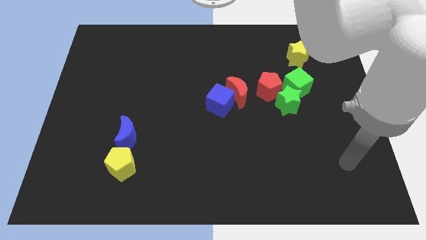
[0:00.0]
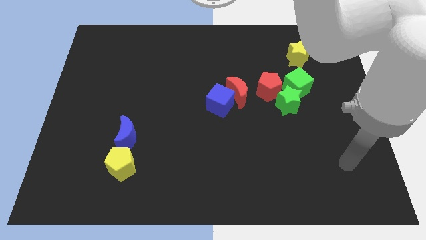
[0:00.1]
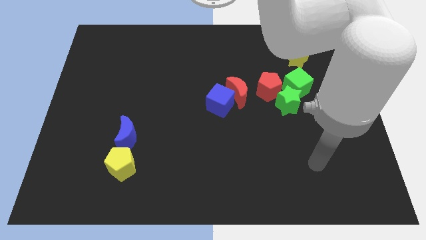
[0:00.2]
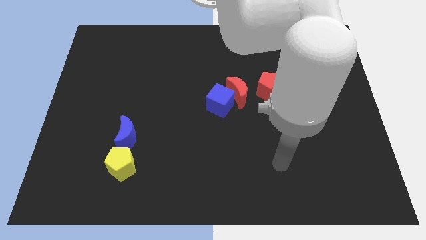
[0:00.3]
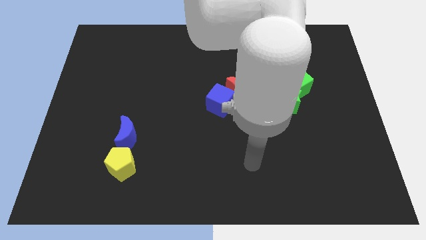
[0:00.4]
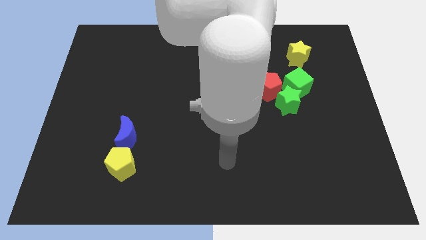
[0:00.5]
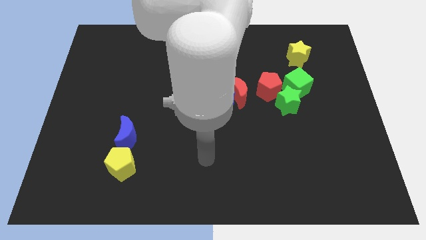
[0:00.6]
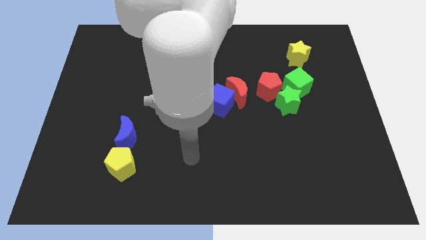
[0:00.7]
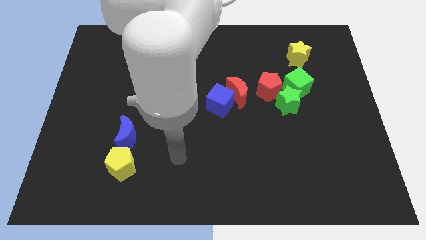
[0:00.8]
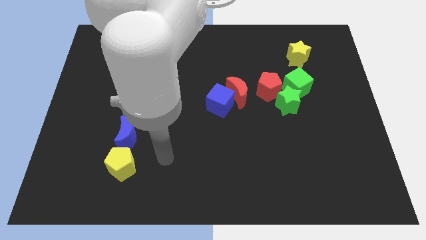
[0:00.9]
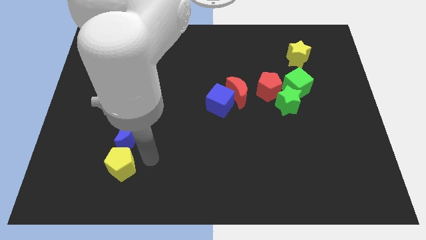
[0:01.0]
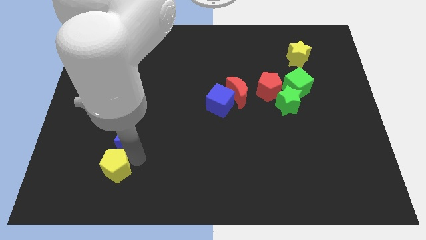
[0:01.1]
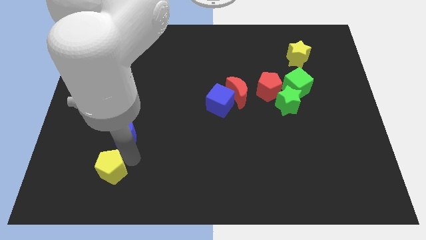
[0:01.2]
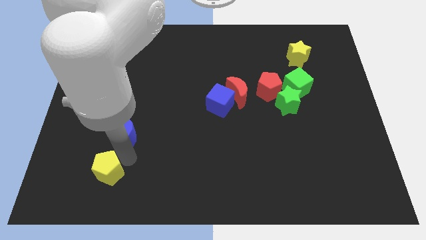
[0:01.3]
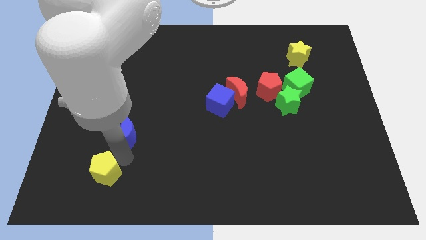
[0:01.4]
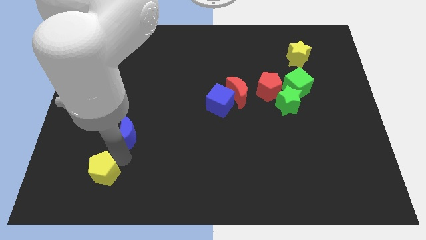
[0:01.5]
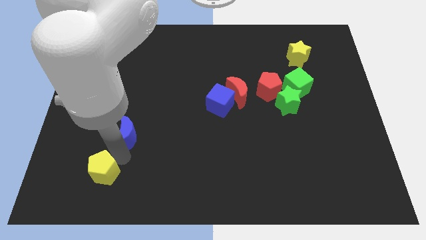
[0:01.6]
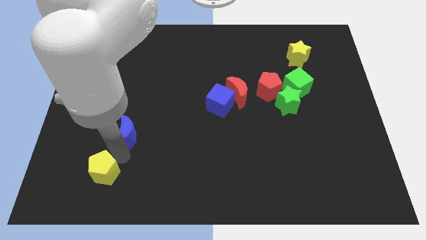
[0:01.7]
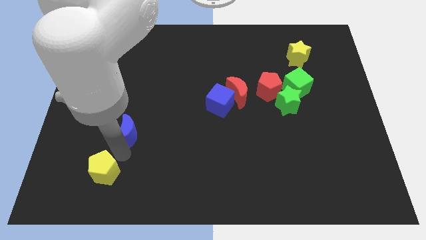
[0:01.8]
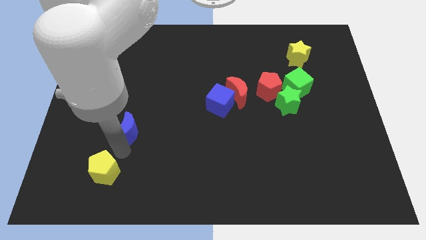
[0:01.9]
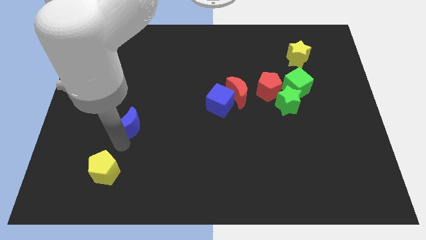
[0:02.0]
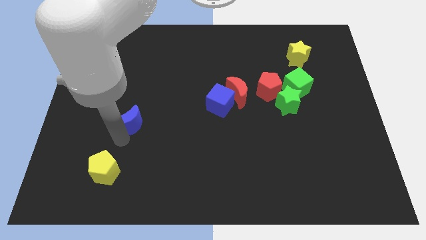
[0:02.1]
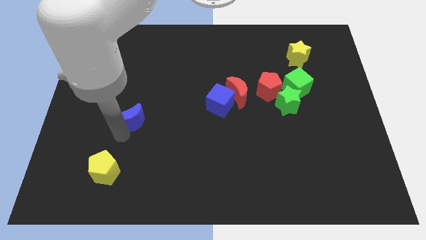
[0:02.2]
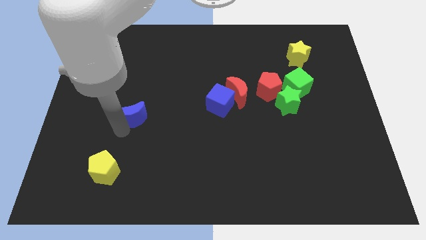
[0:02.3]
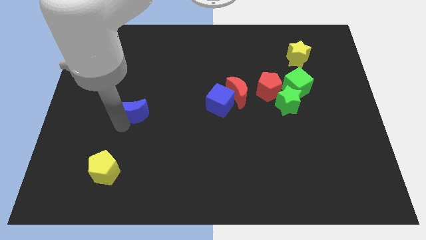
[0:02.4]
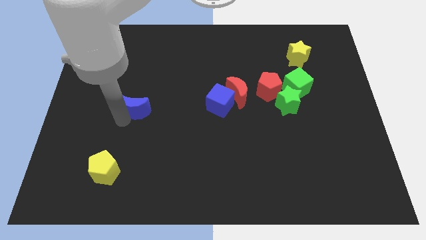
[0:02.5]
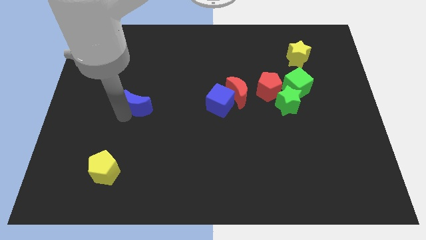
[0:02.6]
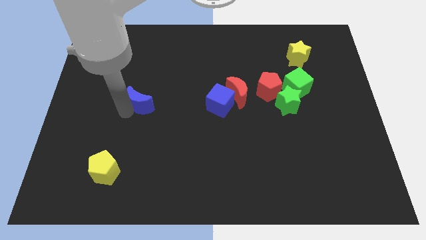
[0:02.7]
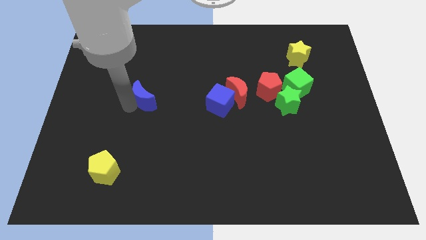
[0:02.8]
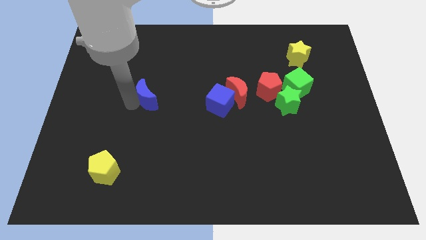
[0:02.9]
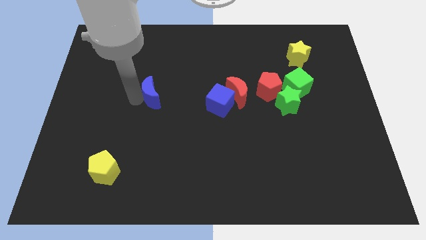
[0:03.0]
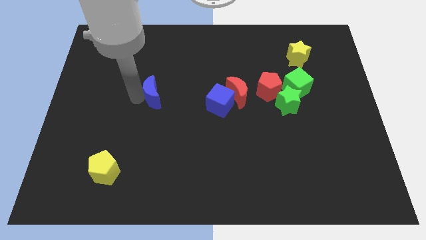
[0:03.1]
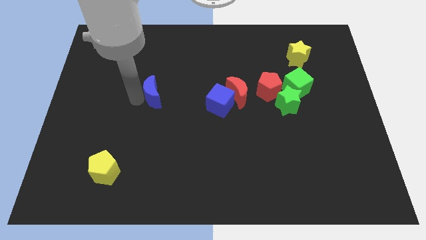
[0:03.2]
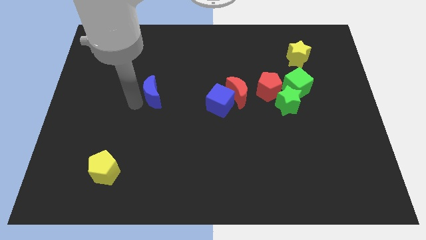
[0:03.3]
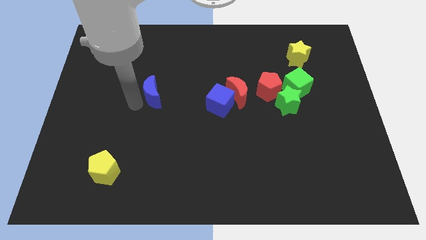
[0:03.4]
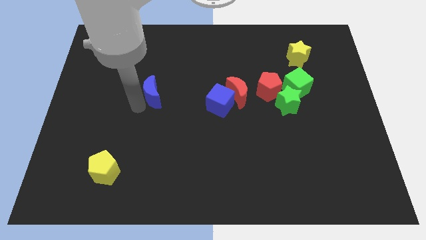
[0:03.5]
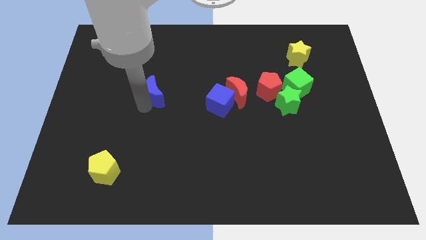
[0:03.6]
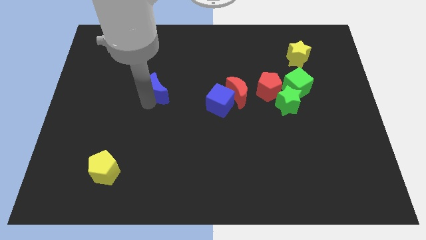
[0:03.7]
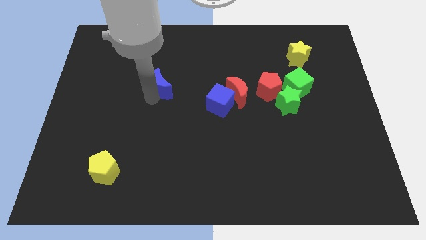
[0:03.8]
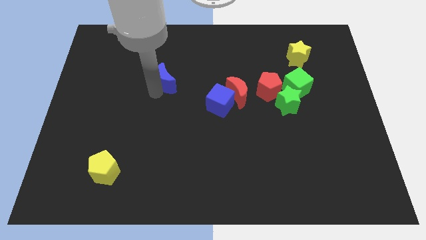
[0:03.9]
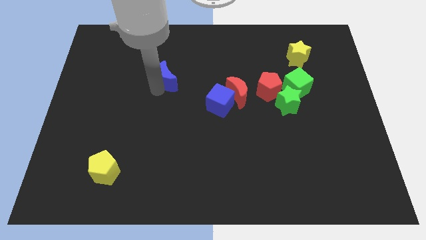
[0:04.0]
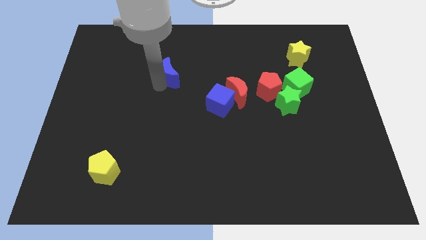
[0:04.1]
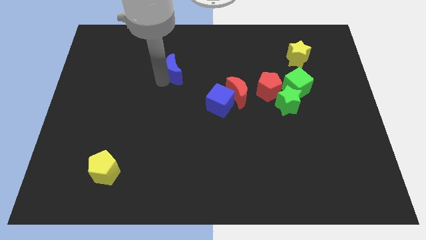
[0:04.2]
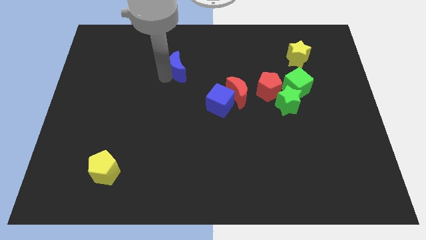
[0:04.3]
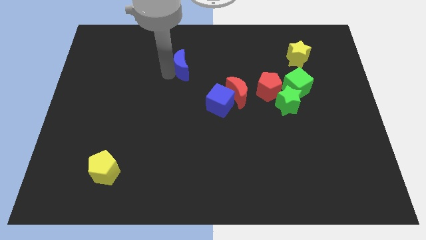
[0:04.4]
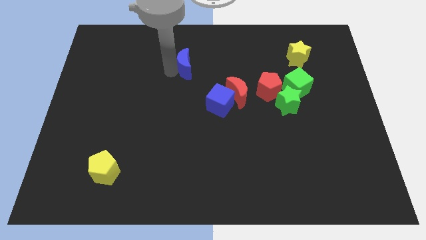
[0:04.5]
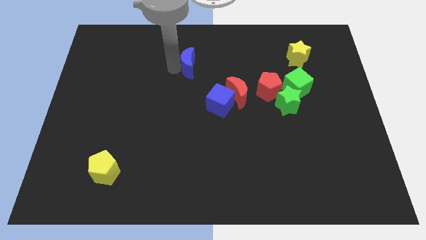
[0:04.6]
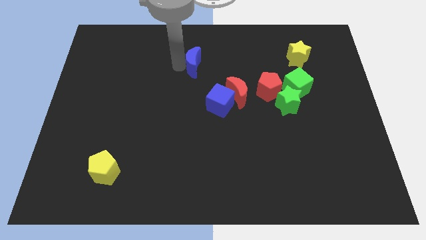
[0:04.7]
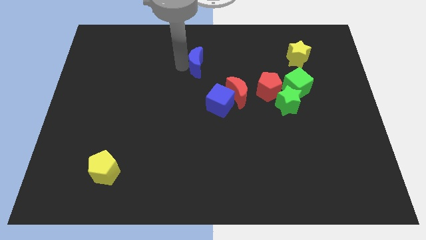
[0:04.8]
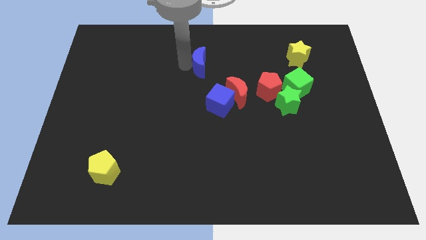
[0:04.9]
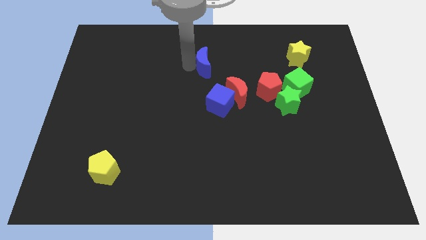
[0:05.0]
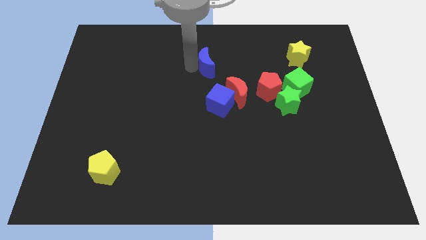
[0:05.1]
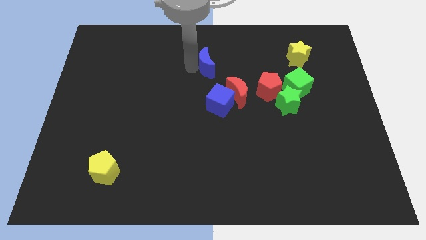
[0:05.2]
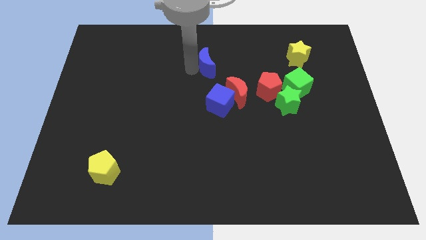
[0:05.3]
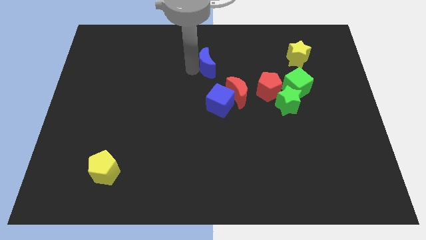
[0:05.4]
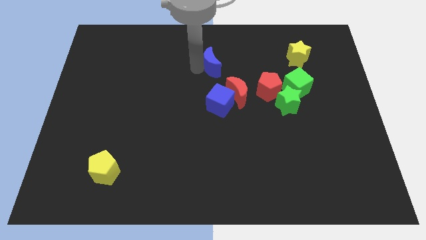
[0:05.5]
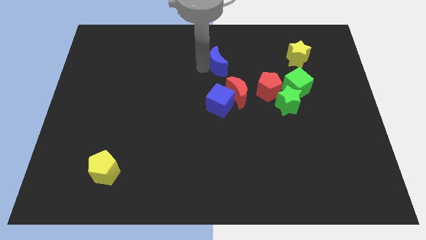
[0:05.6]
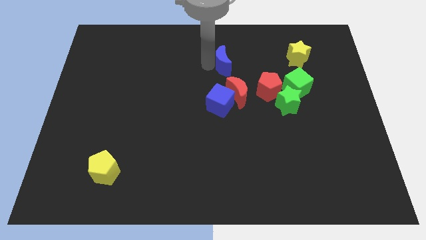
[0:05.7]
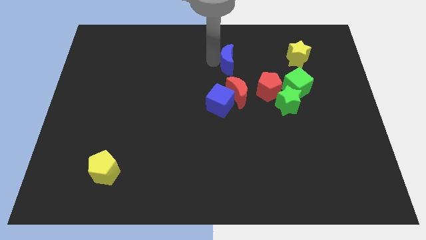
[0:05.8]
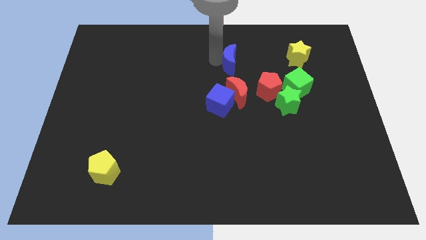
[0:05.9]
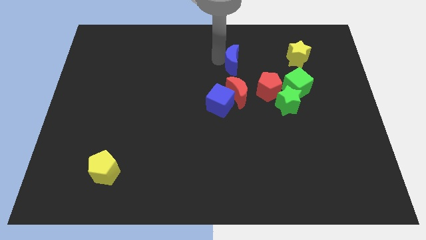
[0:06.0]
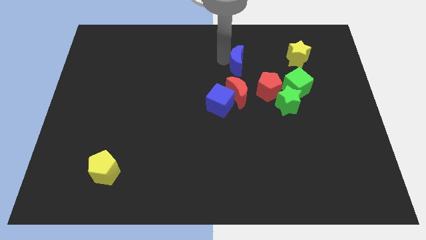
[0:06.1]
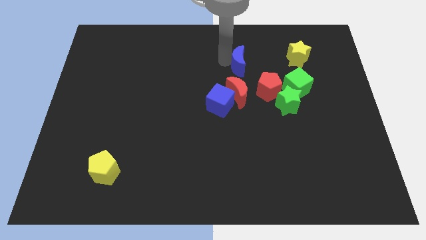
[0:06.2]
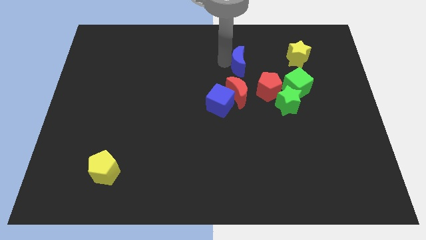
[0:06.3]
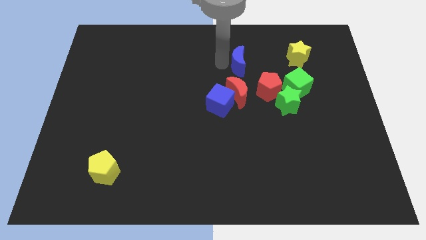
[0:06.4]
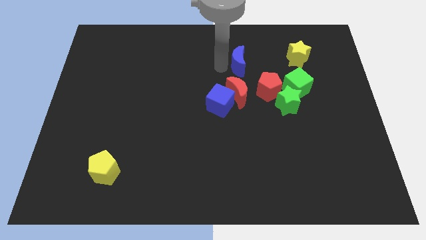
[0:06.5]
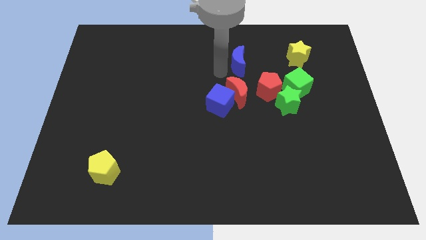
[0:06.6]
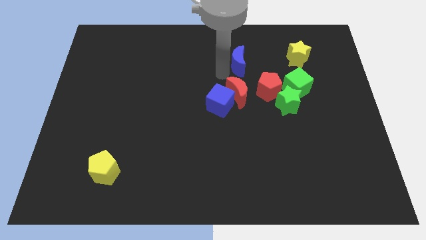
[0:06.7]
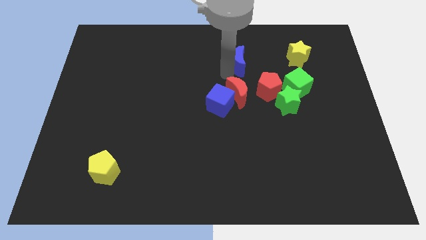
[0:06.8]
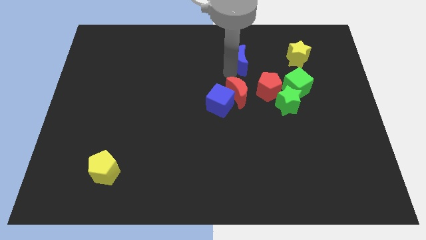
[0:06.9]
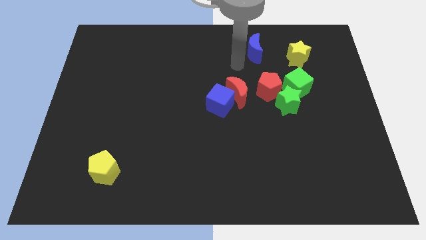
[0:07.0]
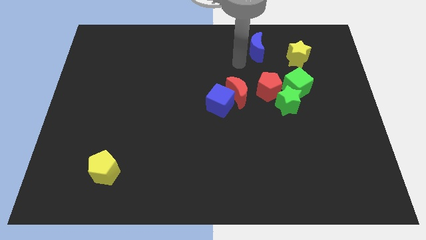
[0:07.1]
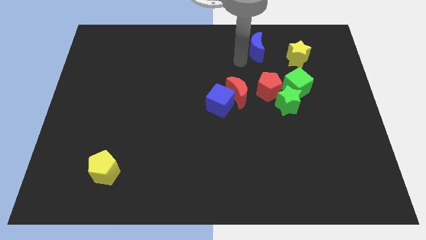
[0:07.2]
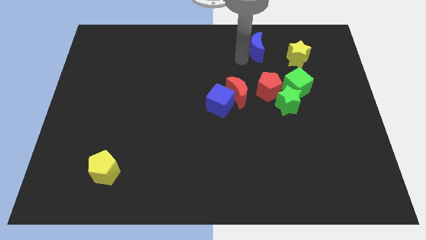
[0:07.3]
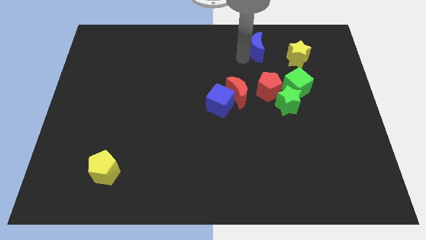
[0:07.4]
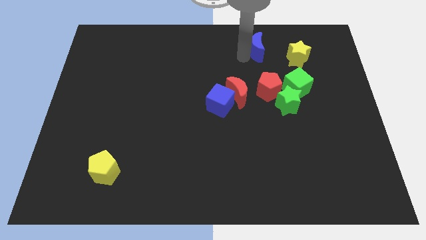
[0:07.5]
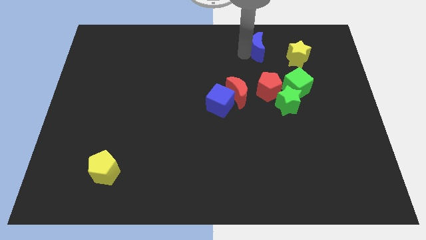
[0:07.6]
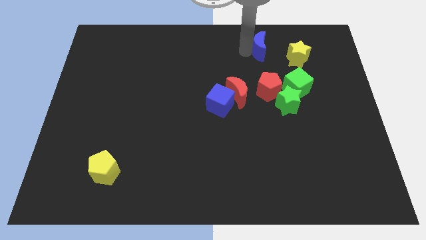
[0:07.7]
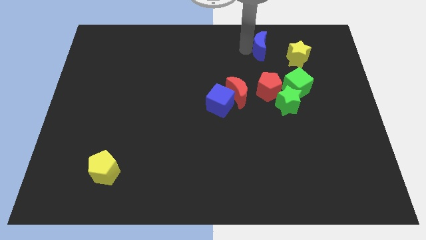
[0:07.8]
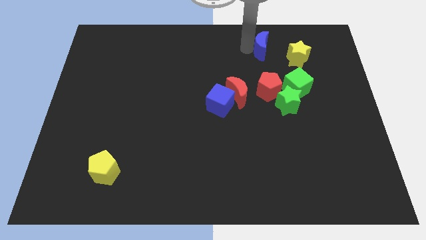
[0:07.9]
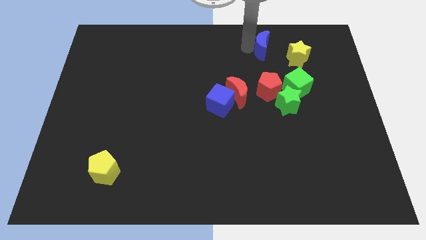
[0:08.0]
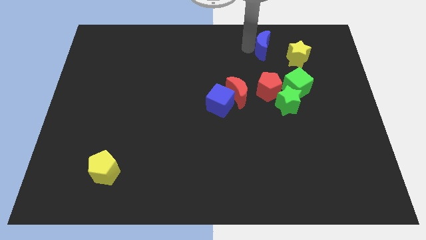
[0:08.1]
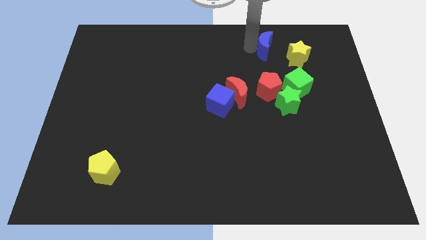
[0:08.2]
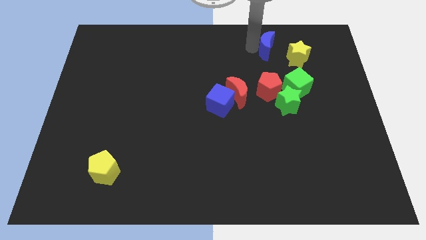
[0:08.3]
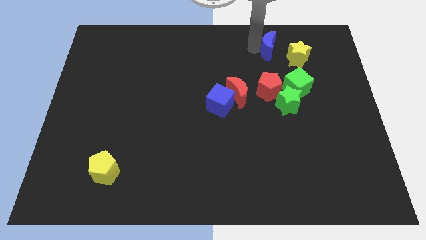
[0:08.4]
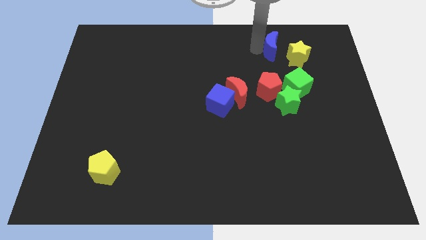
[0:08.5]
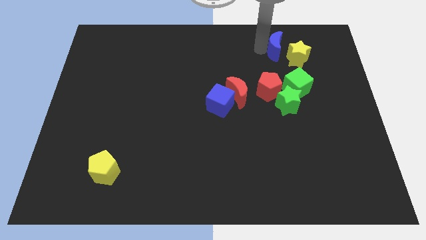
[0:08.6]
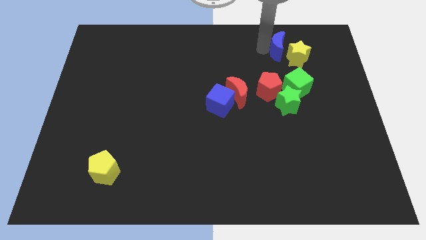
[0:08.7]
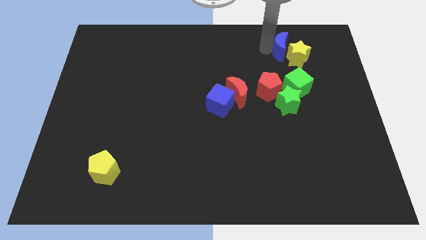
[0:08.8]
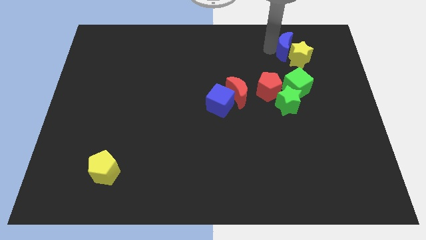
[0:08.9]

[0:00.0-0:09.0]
move the blue moon towards the yellow star
